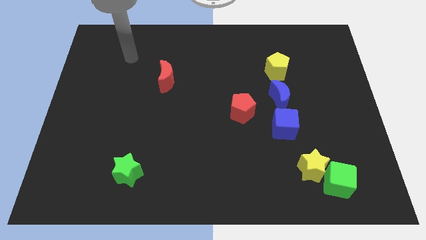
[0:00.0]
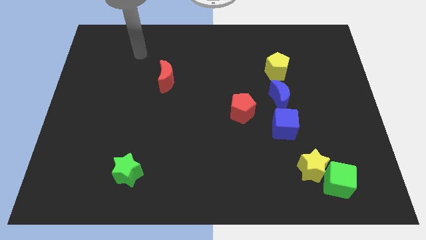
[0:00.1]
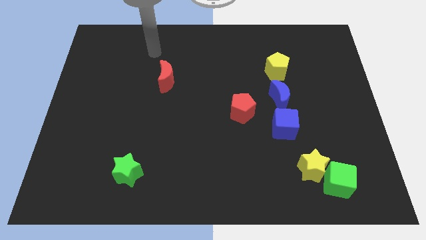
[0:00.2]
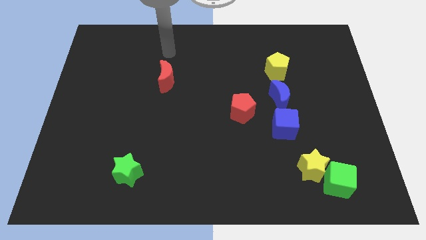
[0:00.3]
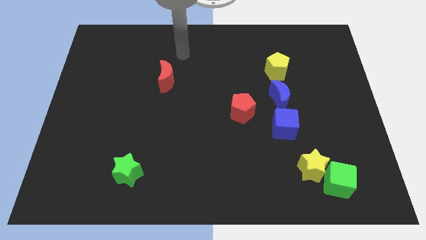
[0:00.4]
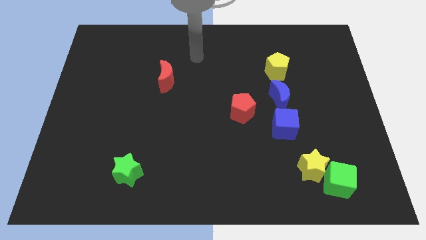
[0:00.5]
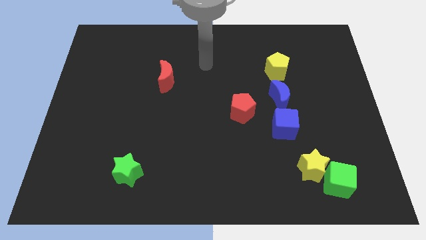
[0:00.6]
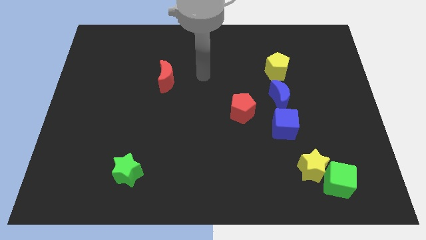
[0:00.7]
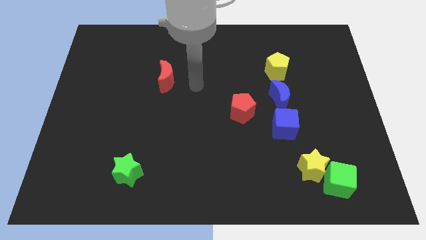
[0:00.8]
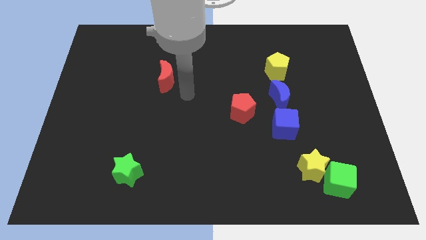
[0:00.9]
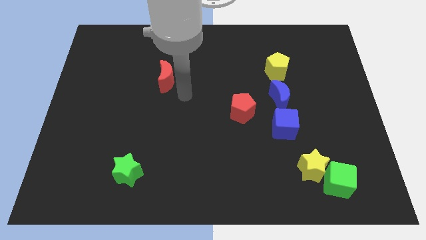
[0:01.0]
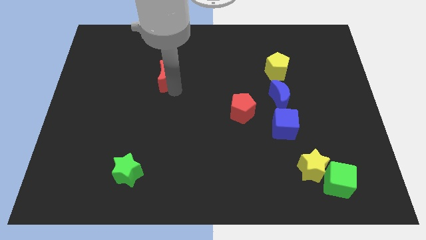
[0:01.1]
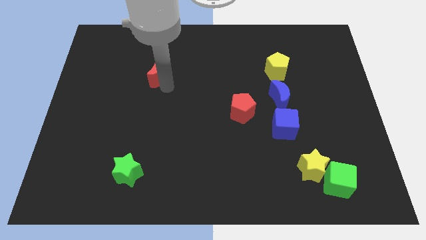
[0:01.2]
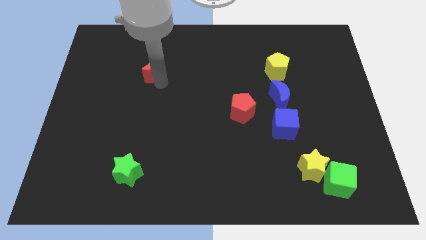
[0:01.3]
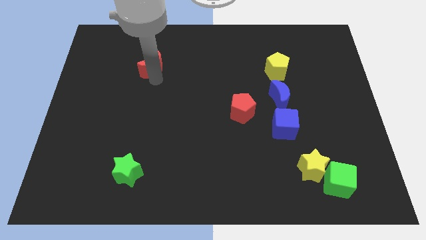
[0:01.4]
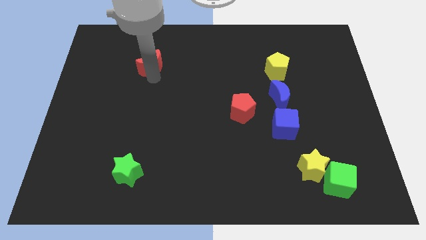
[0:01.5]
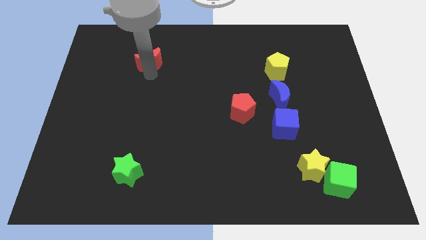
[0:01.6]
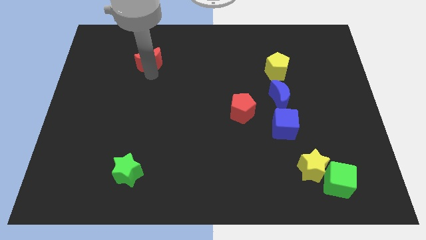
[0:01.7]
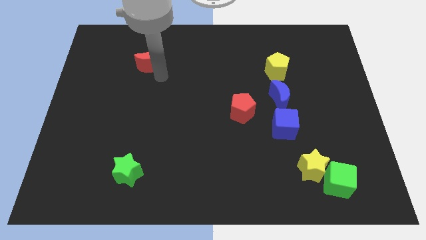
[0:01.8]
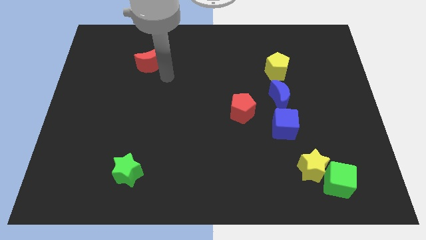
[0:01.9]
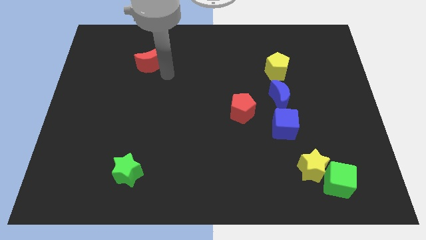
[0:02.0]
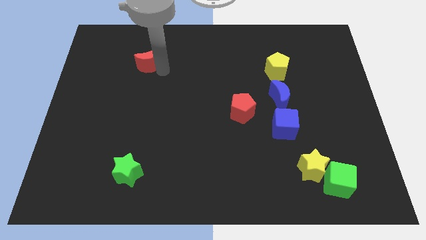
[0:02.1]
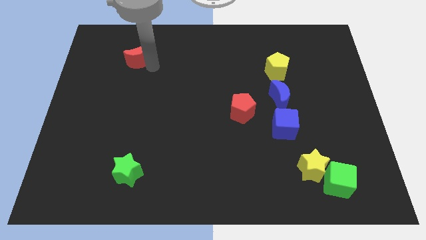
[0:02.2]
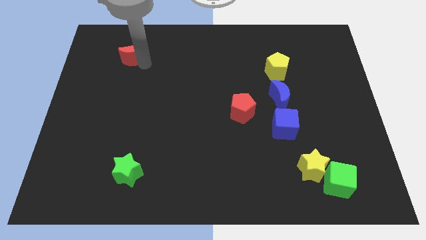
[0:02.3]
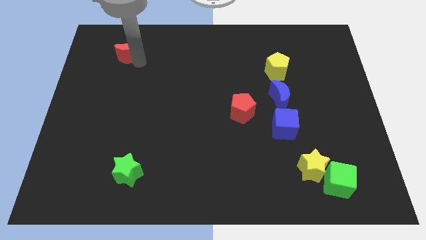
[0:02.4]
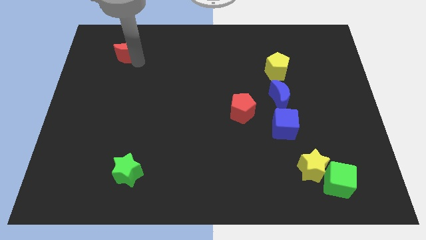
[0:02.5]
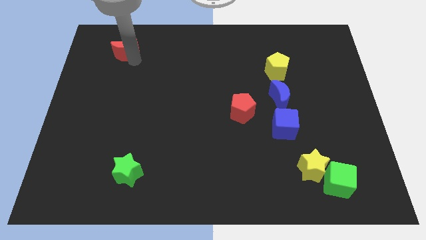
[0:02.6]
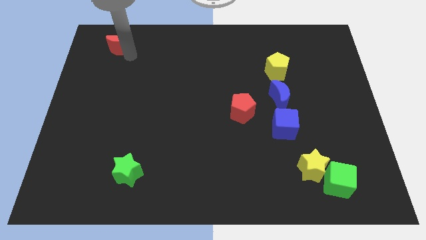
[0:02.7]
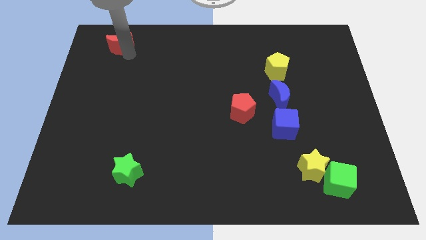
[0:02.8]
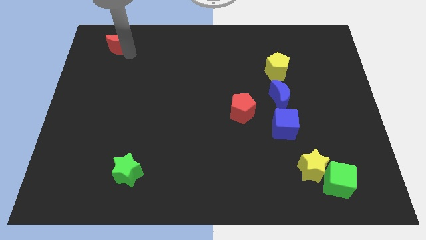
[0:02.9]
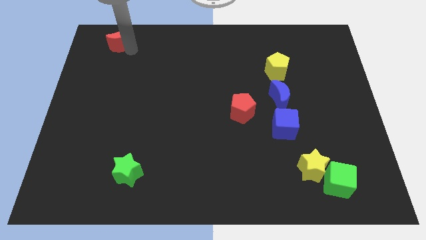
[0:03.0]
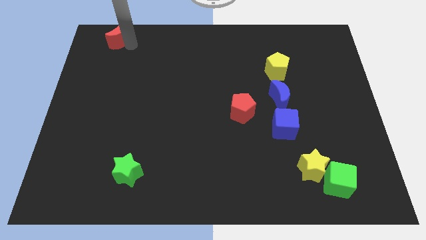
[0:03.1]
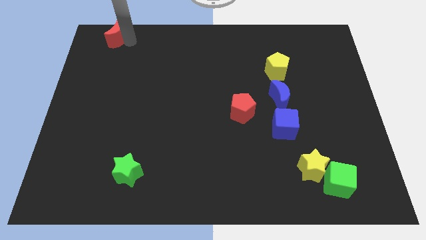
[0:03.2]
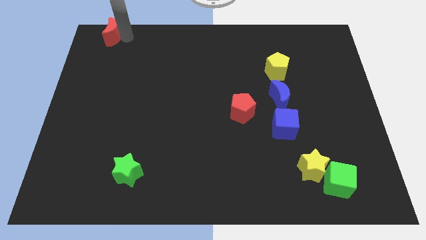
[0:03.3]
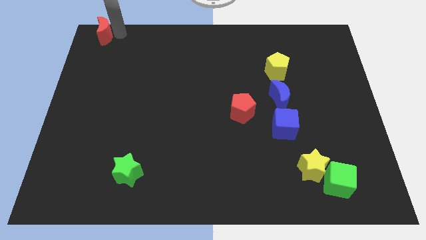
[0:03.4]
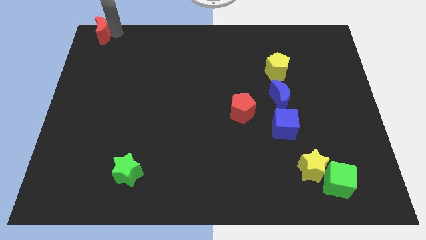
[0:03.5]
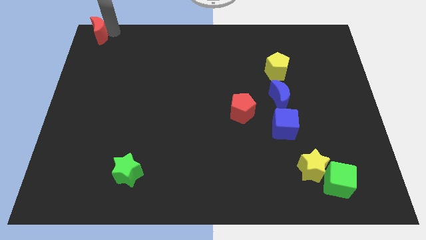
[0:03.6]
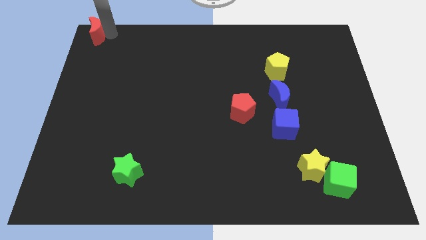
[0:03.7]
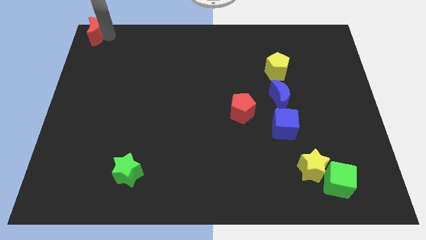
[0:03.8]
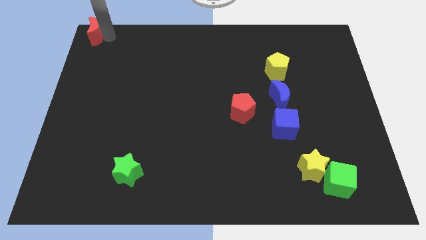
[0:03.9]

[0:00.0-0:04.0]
move the red moon to the top left

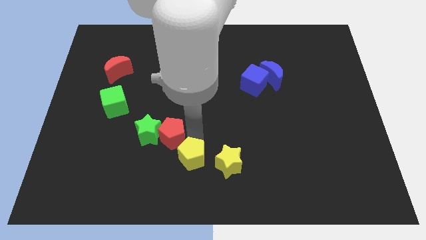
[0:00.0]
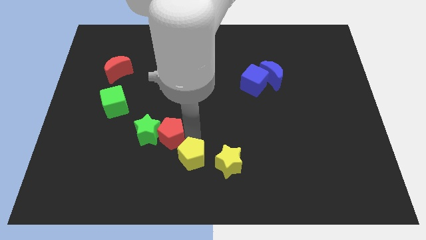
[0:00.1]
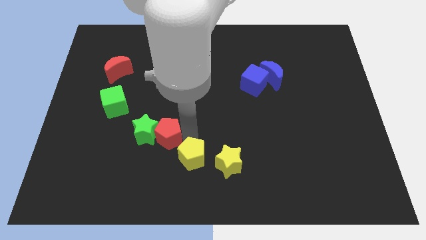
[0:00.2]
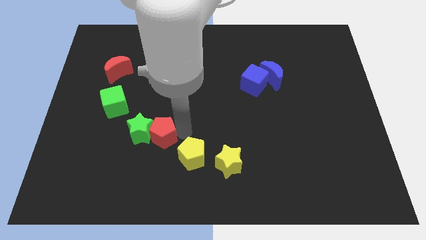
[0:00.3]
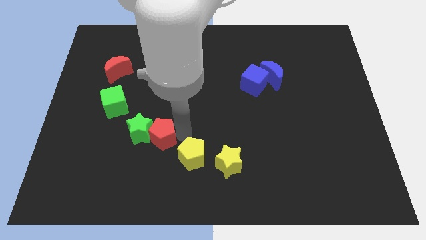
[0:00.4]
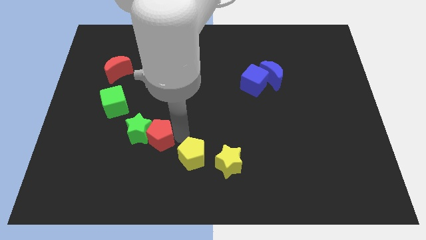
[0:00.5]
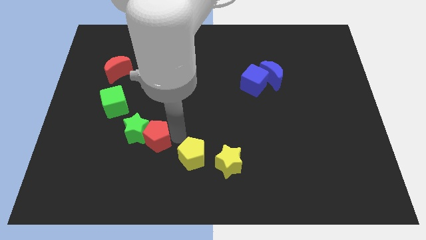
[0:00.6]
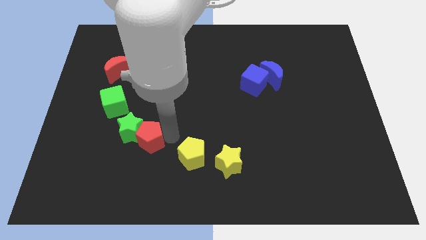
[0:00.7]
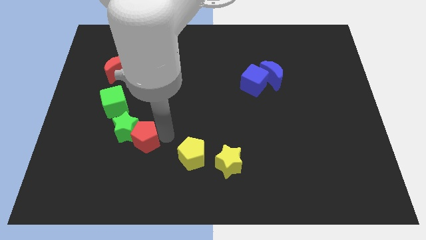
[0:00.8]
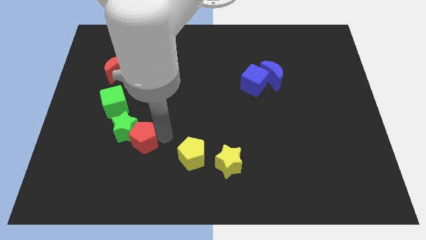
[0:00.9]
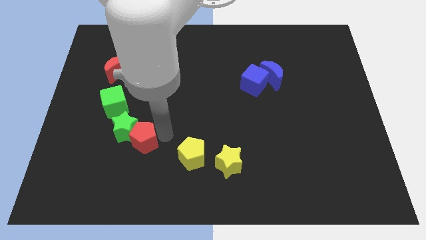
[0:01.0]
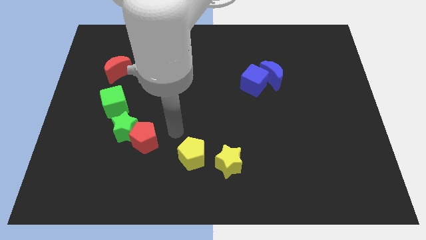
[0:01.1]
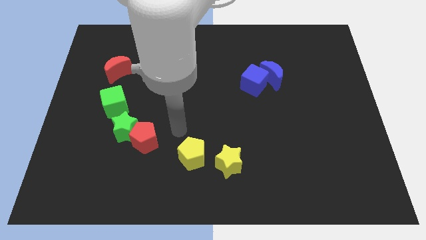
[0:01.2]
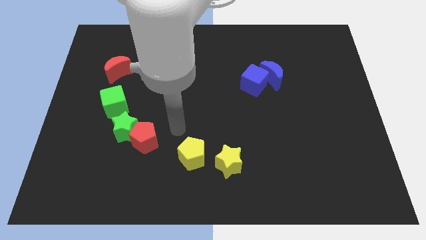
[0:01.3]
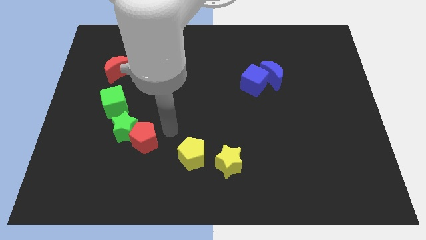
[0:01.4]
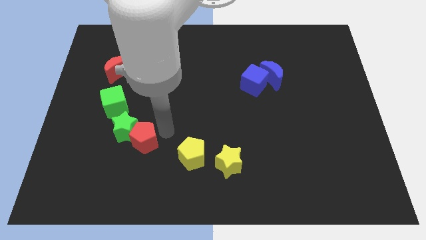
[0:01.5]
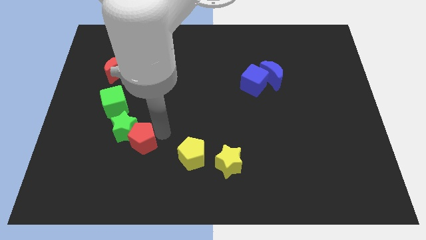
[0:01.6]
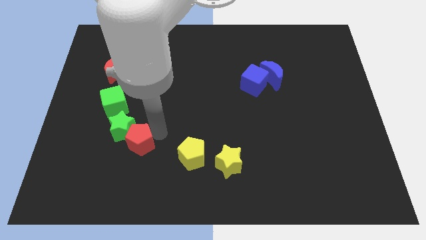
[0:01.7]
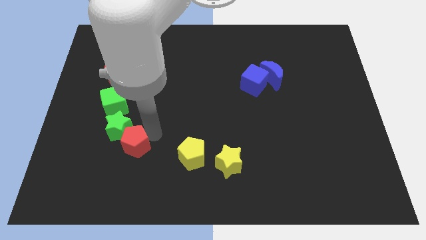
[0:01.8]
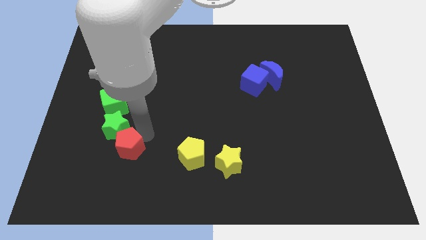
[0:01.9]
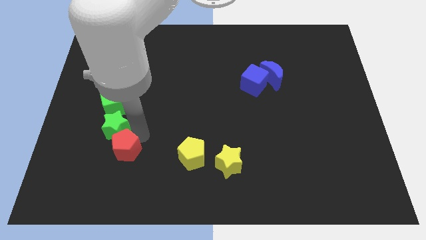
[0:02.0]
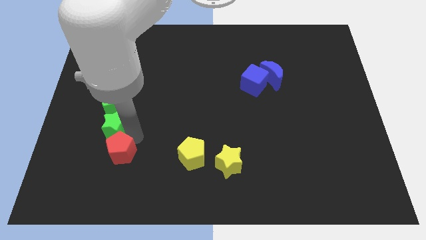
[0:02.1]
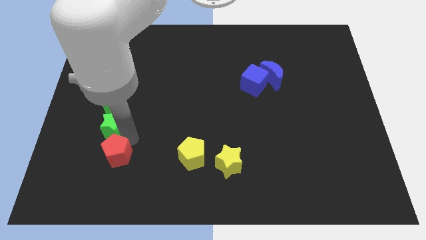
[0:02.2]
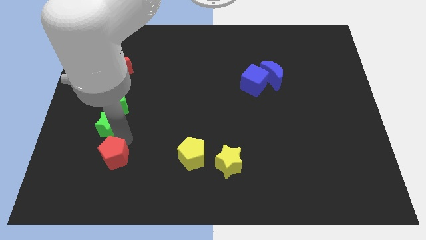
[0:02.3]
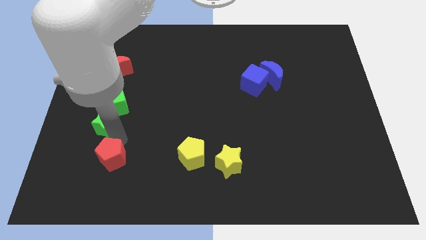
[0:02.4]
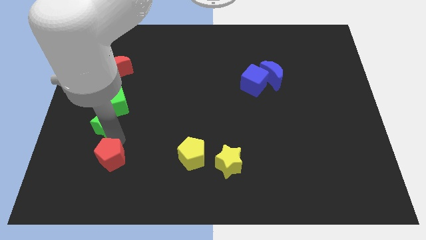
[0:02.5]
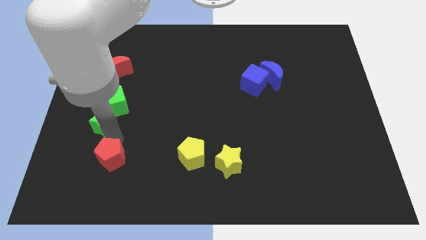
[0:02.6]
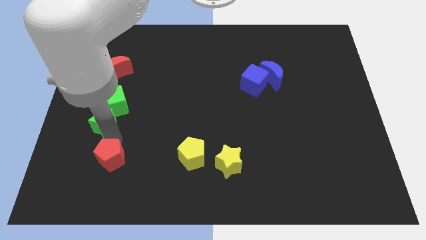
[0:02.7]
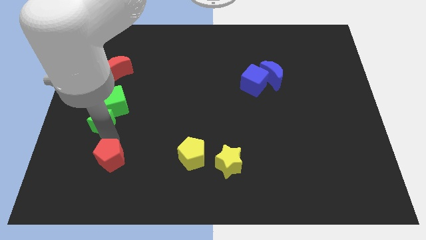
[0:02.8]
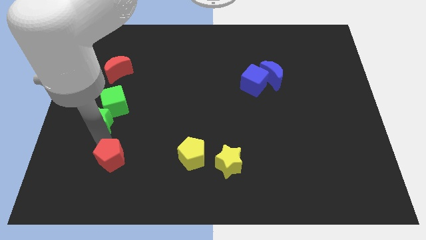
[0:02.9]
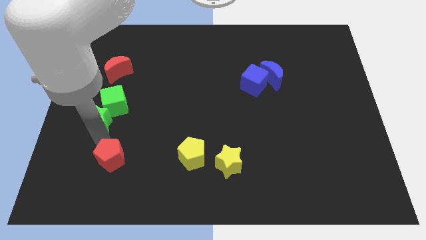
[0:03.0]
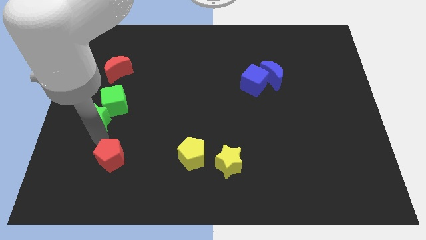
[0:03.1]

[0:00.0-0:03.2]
push the red pentagon into the green star

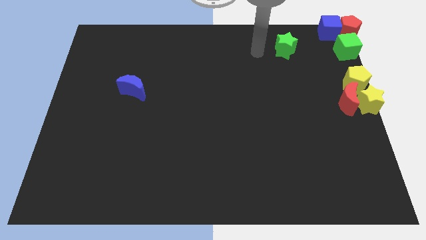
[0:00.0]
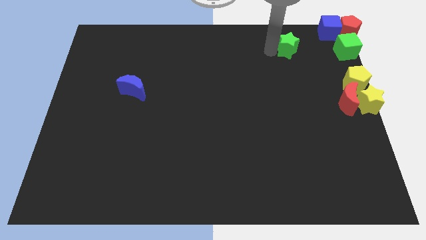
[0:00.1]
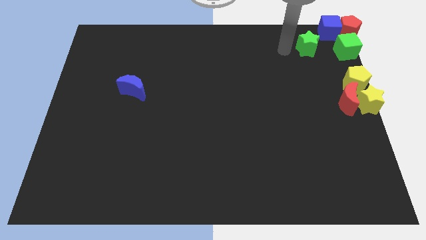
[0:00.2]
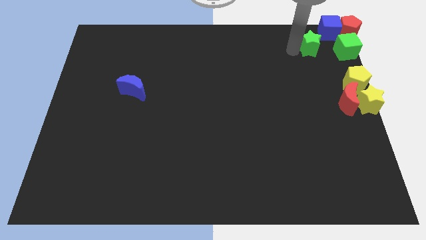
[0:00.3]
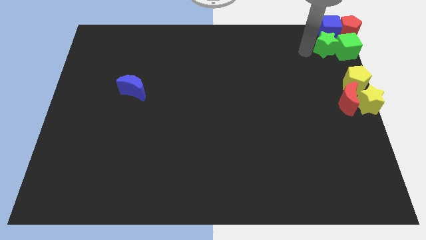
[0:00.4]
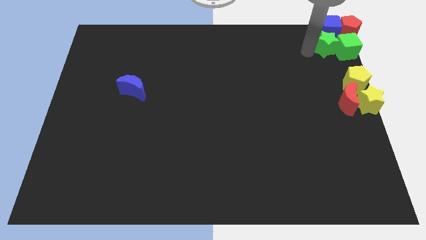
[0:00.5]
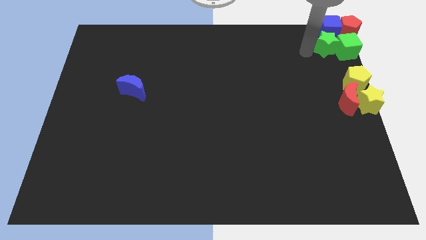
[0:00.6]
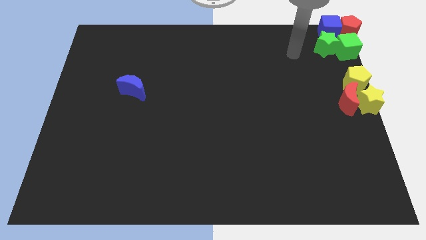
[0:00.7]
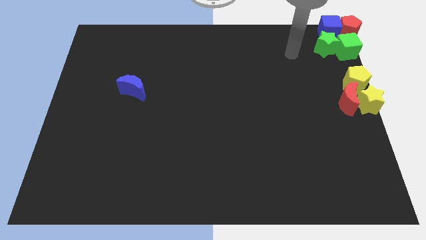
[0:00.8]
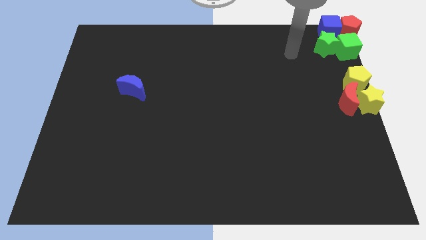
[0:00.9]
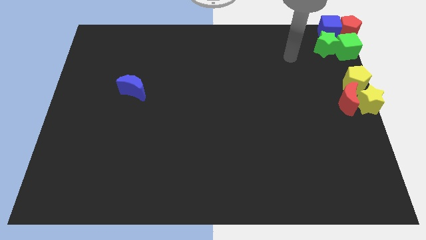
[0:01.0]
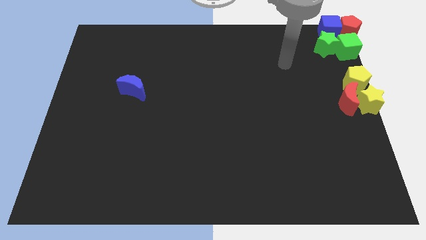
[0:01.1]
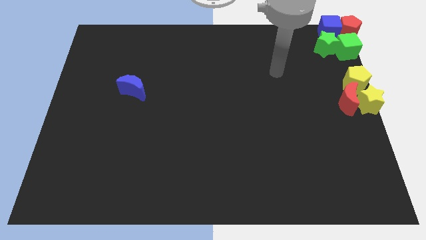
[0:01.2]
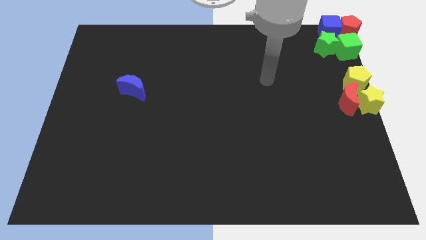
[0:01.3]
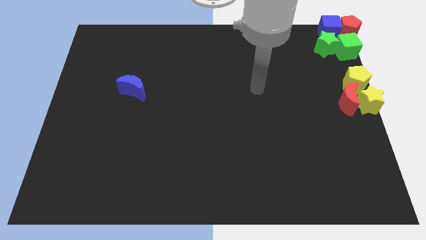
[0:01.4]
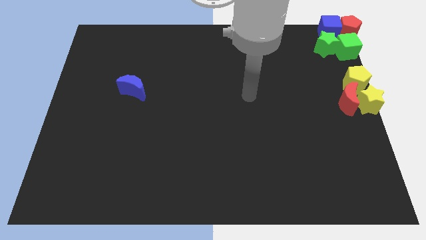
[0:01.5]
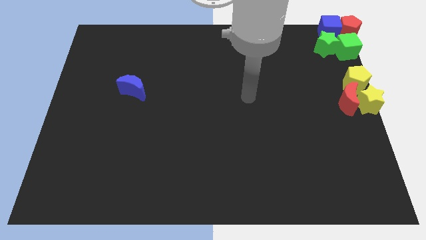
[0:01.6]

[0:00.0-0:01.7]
move the green star to the left side of the green cube
